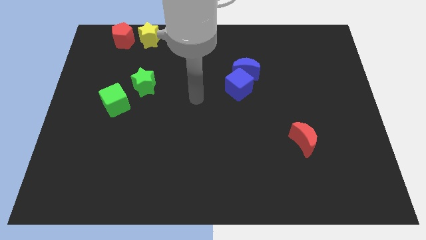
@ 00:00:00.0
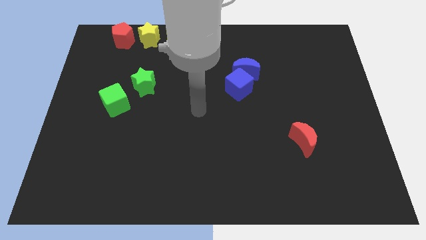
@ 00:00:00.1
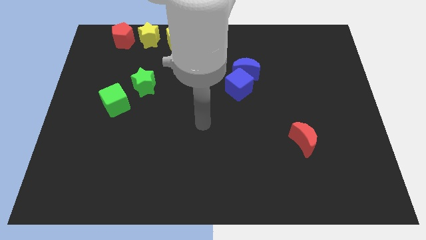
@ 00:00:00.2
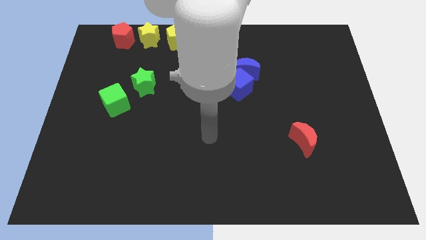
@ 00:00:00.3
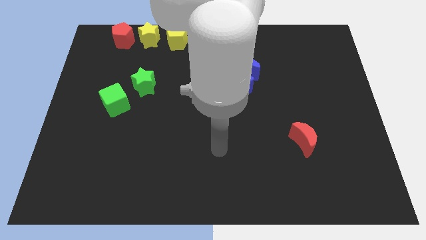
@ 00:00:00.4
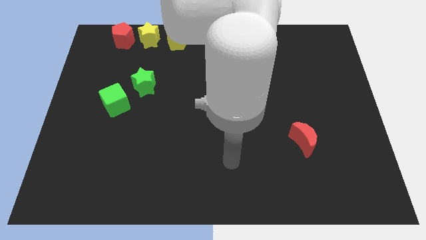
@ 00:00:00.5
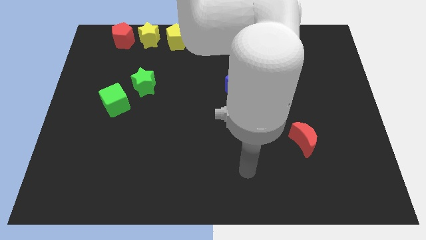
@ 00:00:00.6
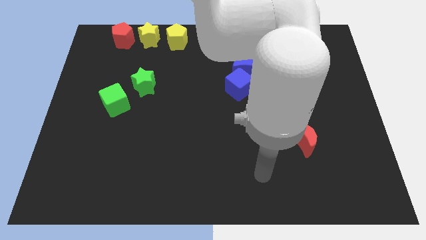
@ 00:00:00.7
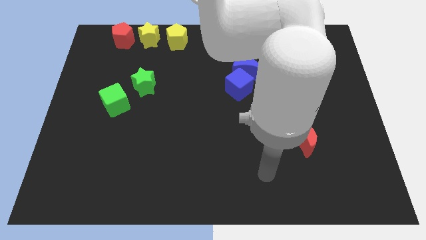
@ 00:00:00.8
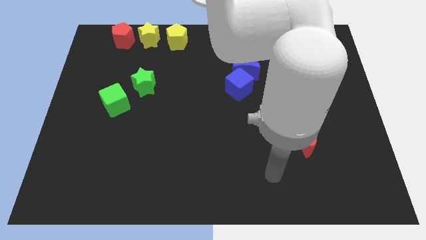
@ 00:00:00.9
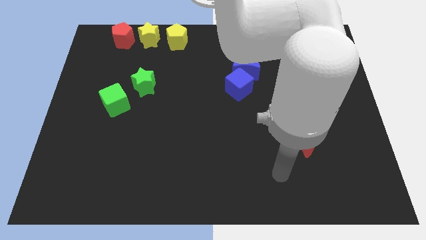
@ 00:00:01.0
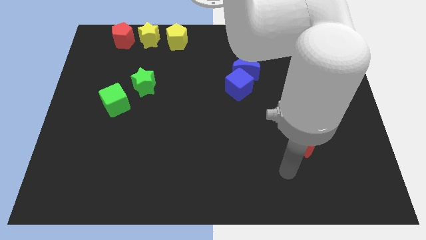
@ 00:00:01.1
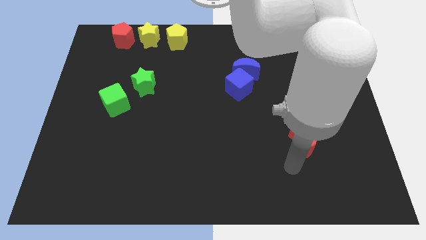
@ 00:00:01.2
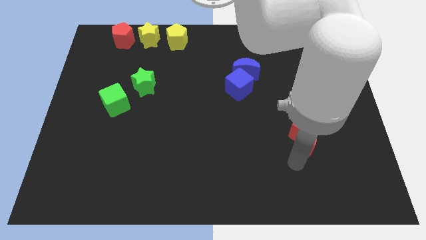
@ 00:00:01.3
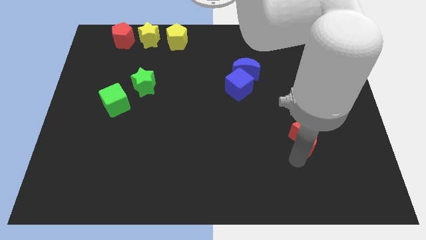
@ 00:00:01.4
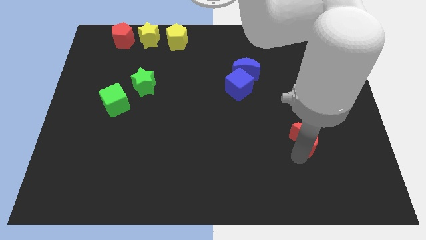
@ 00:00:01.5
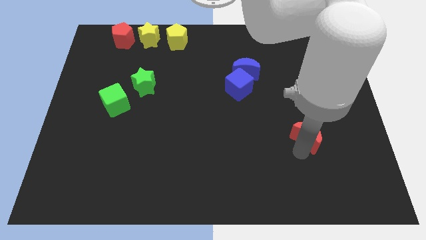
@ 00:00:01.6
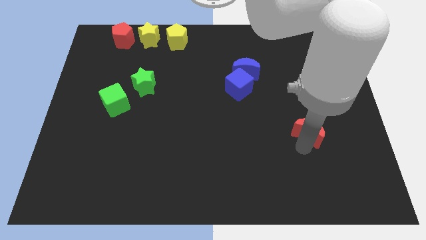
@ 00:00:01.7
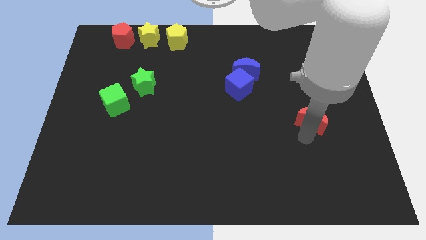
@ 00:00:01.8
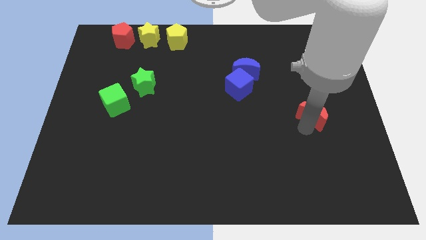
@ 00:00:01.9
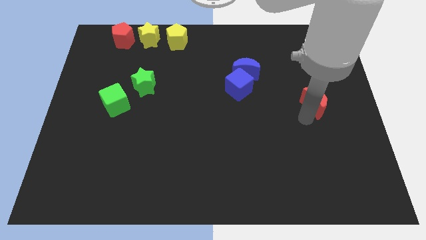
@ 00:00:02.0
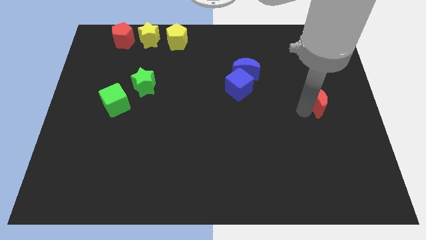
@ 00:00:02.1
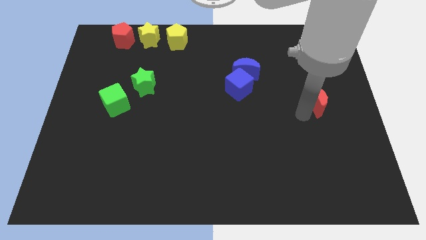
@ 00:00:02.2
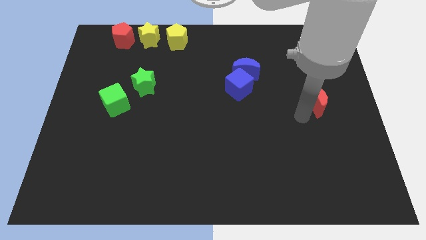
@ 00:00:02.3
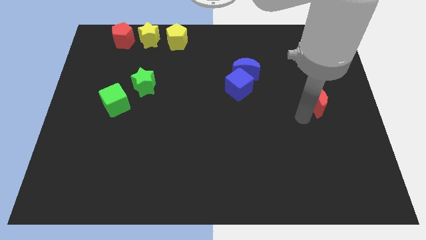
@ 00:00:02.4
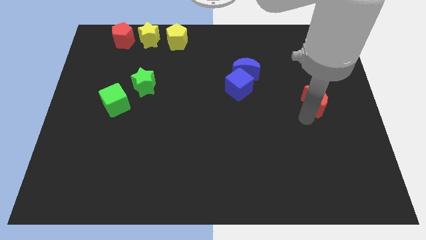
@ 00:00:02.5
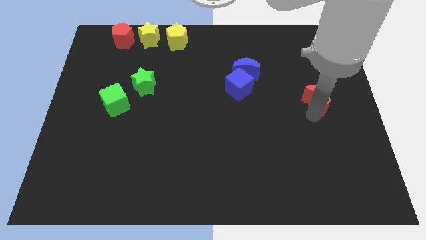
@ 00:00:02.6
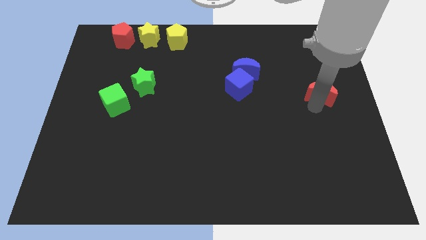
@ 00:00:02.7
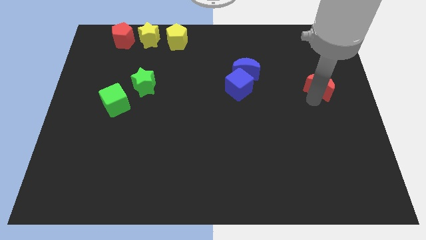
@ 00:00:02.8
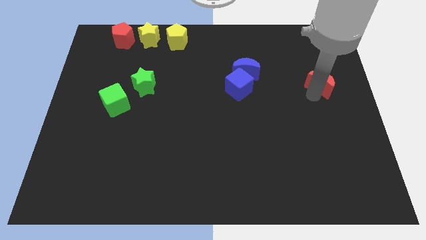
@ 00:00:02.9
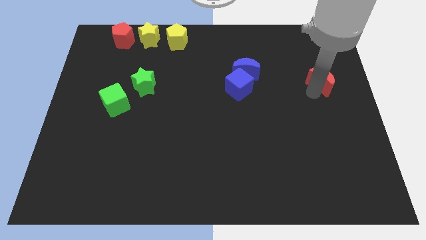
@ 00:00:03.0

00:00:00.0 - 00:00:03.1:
push the red moon slightly upward

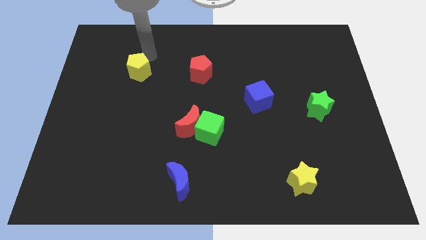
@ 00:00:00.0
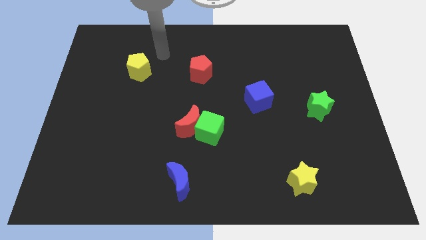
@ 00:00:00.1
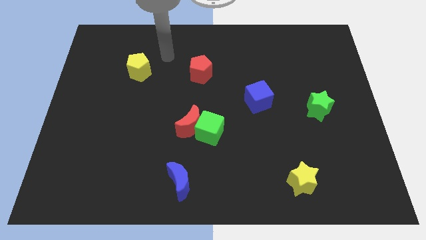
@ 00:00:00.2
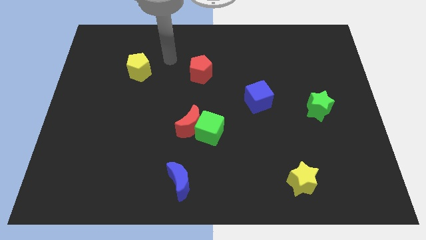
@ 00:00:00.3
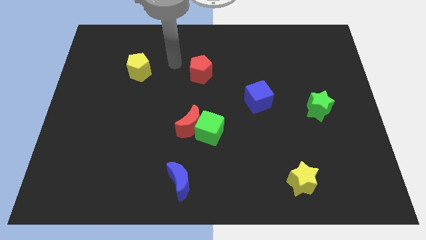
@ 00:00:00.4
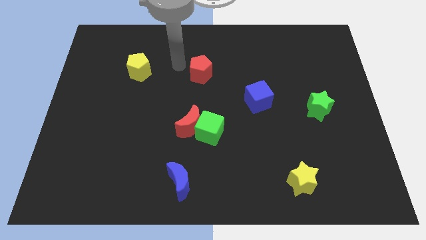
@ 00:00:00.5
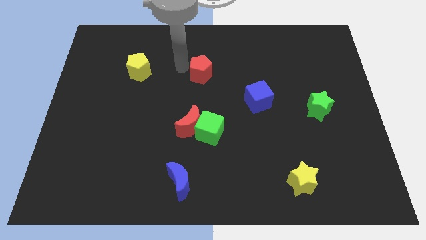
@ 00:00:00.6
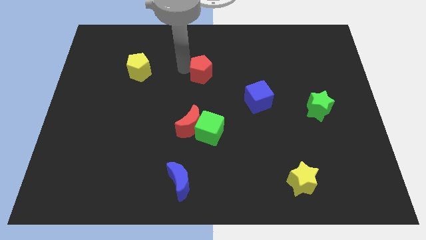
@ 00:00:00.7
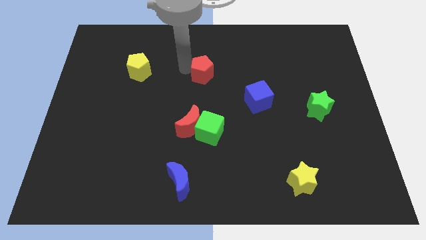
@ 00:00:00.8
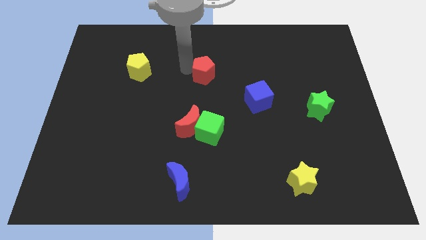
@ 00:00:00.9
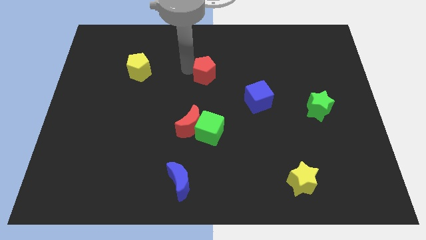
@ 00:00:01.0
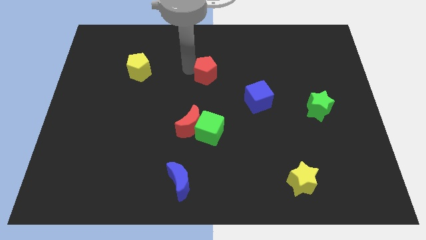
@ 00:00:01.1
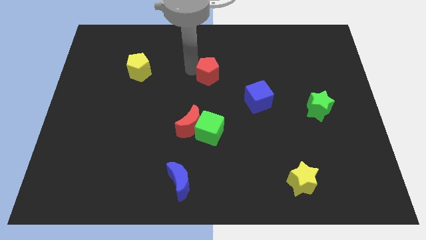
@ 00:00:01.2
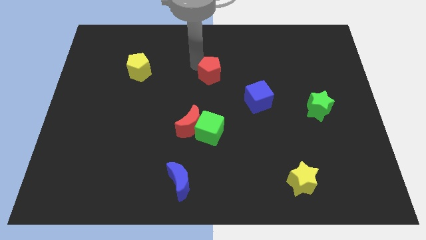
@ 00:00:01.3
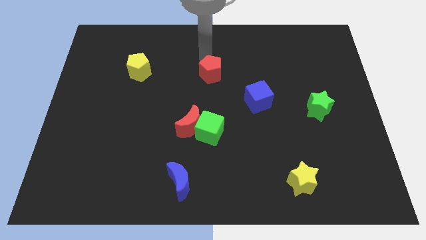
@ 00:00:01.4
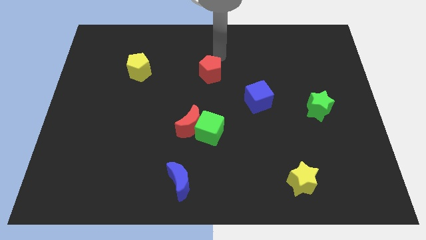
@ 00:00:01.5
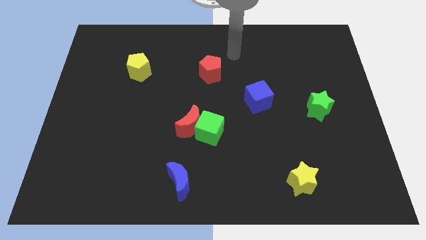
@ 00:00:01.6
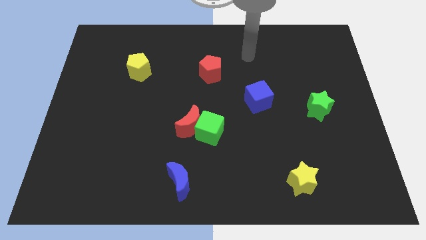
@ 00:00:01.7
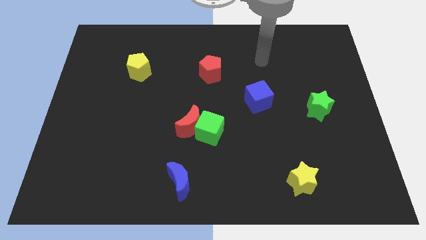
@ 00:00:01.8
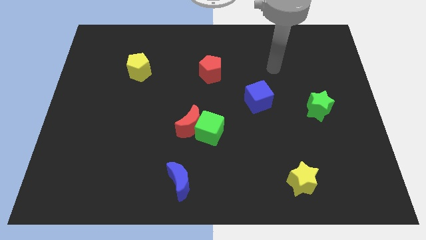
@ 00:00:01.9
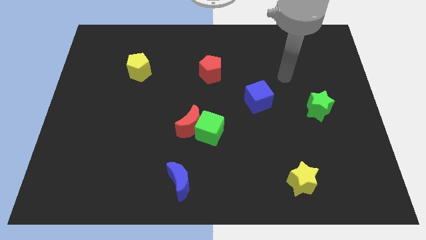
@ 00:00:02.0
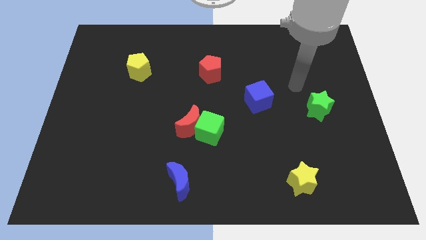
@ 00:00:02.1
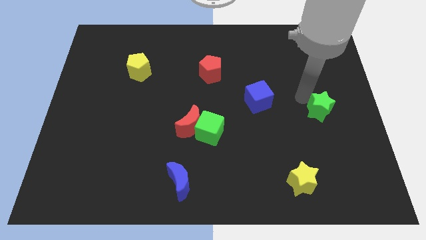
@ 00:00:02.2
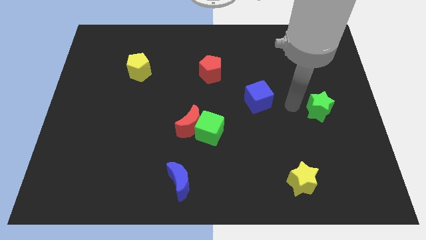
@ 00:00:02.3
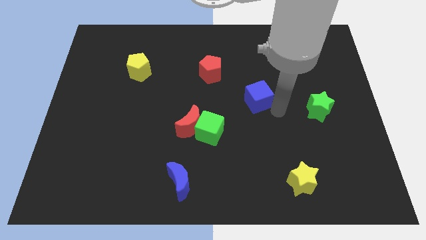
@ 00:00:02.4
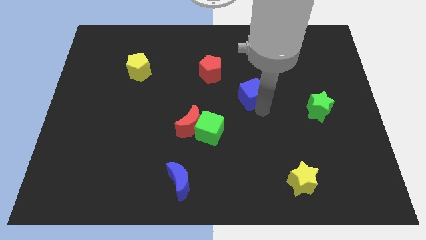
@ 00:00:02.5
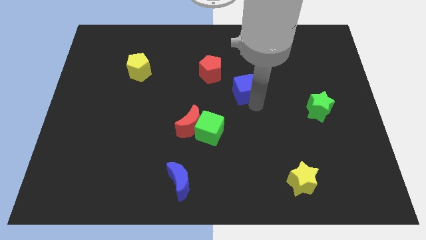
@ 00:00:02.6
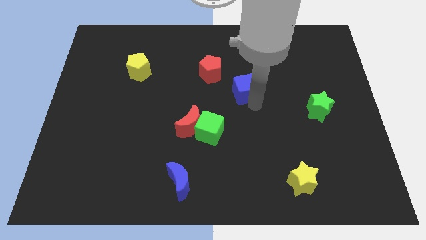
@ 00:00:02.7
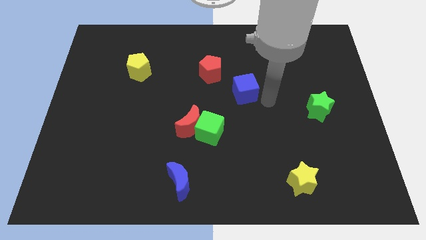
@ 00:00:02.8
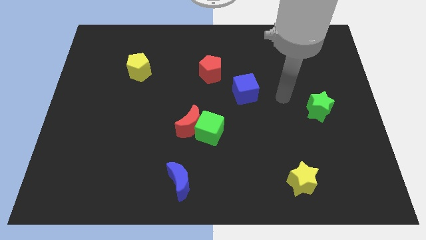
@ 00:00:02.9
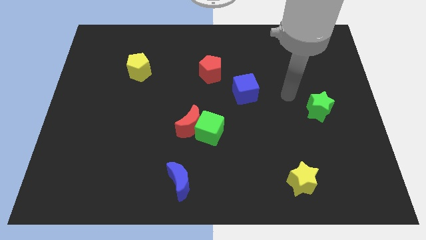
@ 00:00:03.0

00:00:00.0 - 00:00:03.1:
push the blue cube into the red pentagon

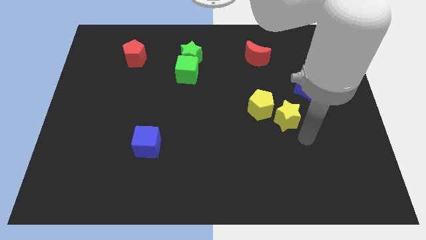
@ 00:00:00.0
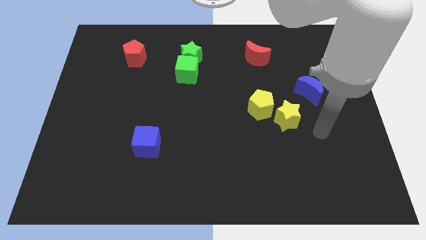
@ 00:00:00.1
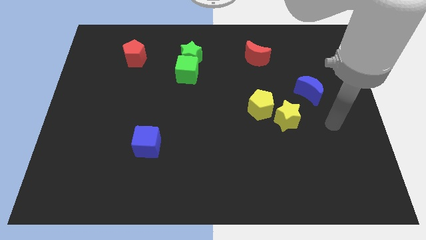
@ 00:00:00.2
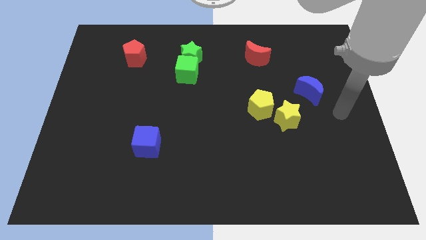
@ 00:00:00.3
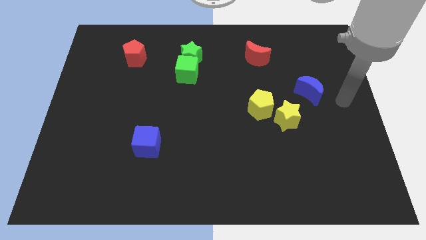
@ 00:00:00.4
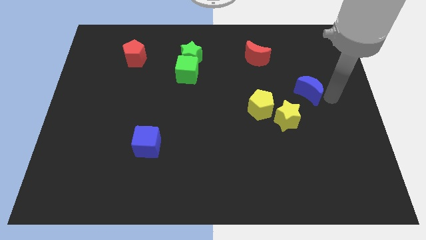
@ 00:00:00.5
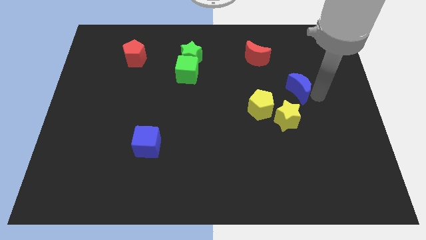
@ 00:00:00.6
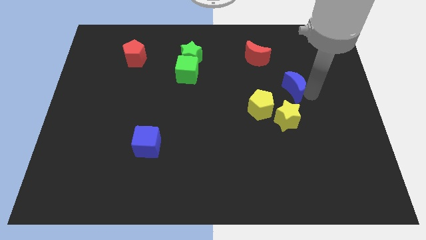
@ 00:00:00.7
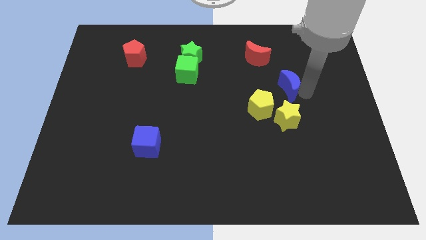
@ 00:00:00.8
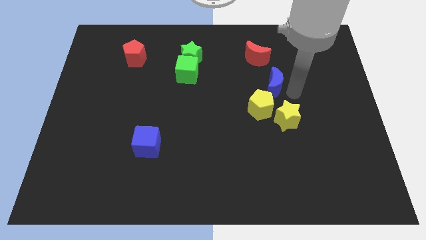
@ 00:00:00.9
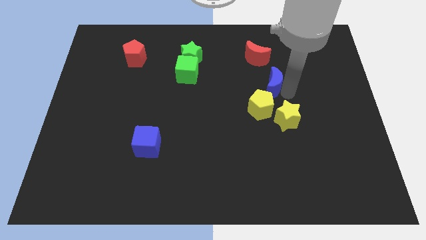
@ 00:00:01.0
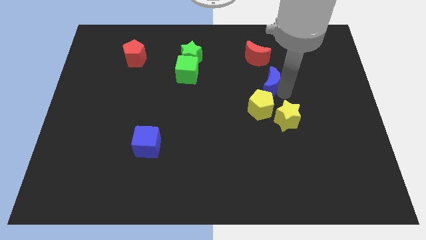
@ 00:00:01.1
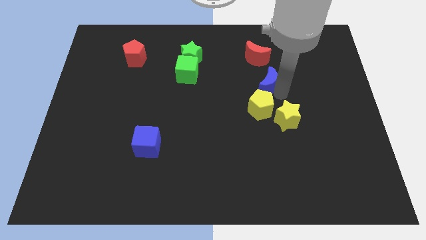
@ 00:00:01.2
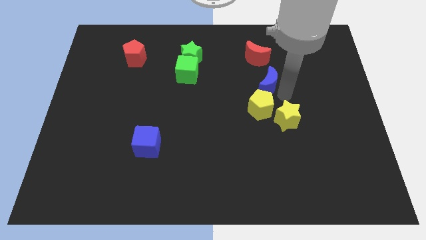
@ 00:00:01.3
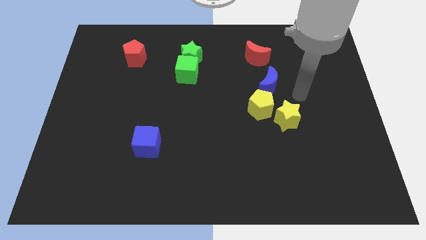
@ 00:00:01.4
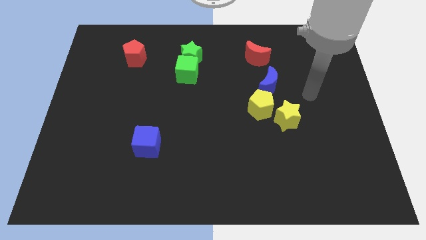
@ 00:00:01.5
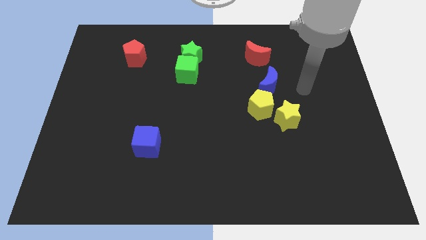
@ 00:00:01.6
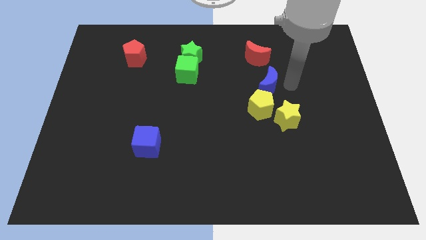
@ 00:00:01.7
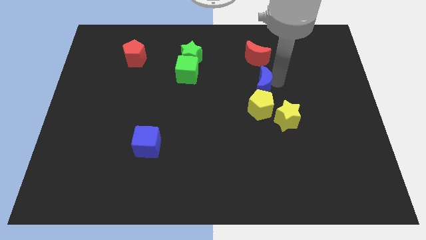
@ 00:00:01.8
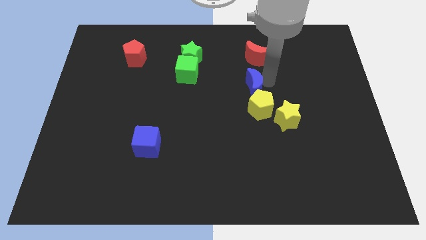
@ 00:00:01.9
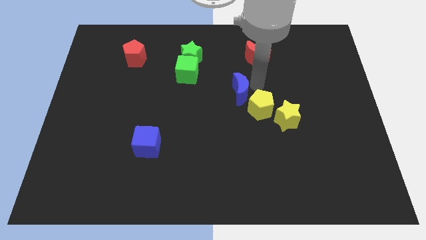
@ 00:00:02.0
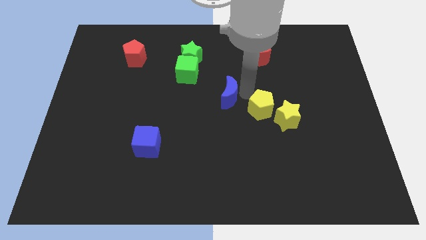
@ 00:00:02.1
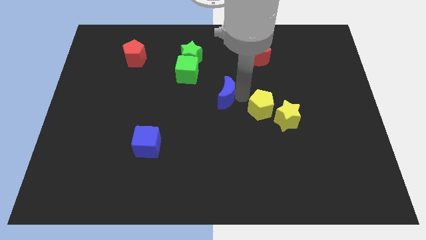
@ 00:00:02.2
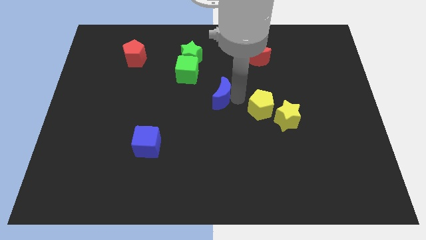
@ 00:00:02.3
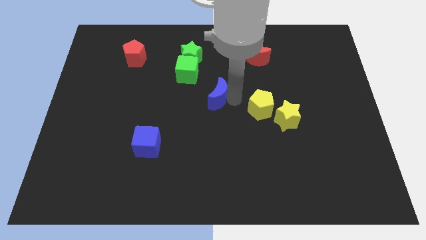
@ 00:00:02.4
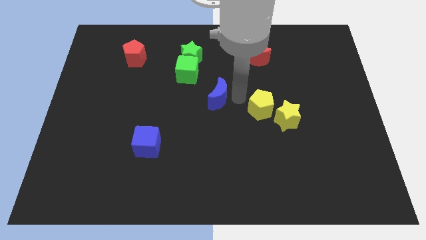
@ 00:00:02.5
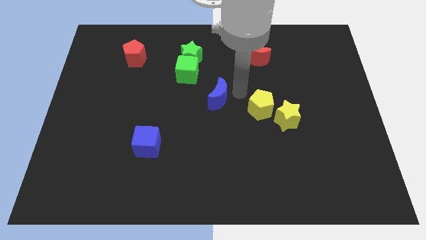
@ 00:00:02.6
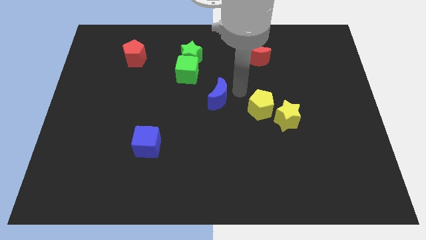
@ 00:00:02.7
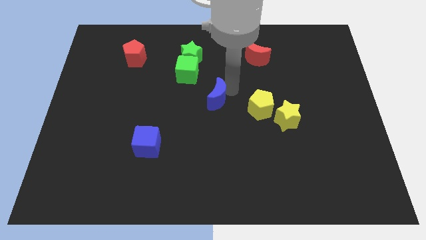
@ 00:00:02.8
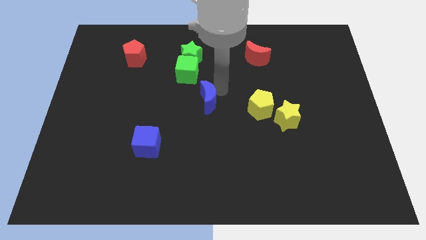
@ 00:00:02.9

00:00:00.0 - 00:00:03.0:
move blue moon to the bottom right og green cube
